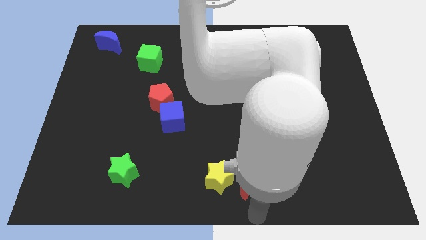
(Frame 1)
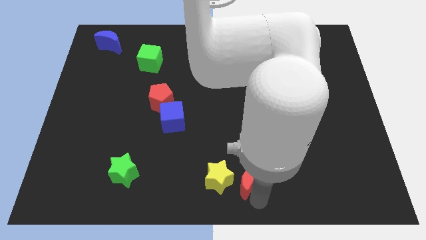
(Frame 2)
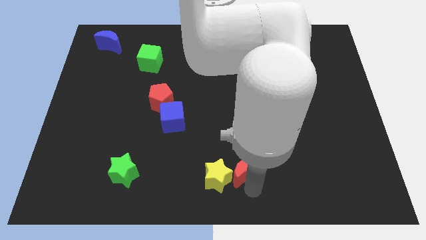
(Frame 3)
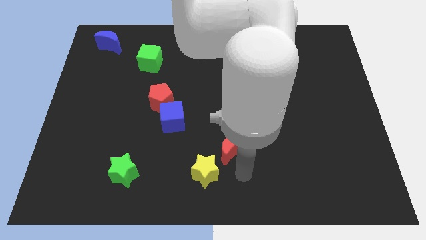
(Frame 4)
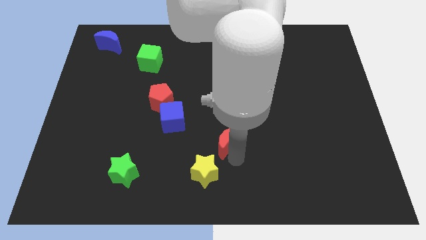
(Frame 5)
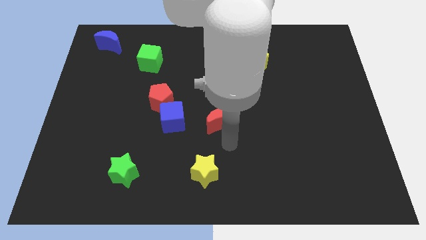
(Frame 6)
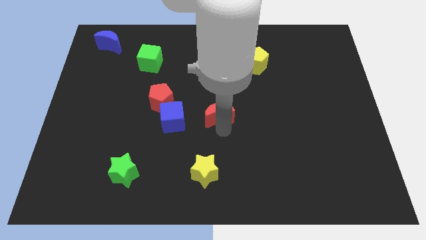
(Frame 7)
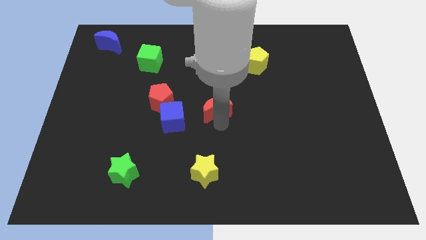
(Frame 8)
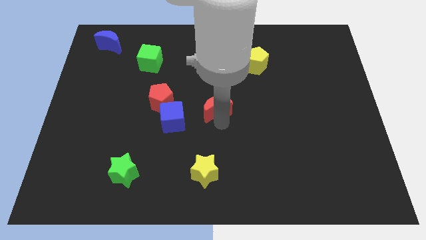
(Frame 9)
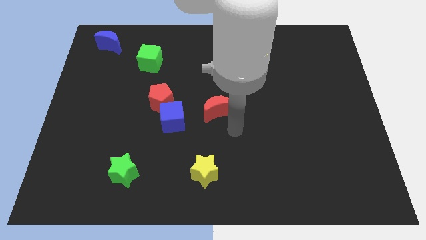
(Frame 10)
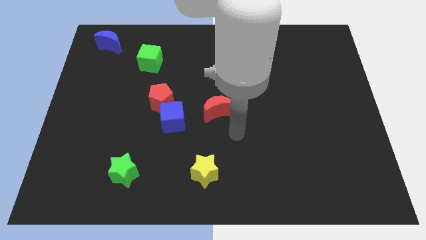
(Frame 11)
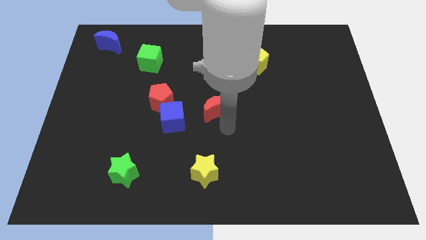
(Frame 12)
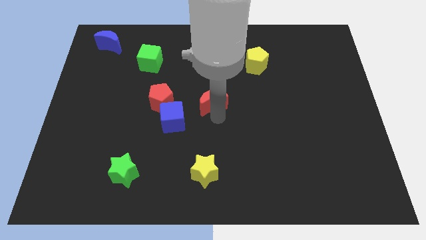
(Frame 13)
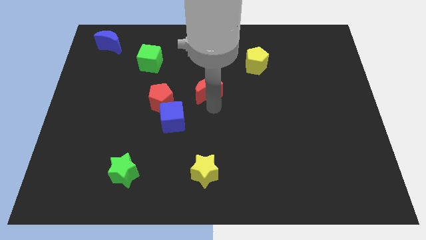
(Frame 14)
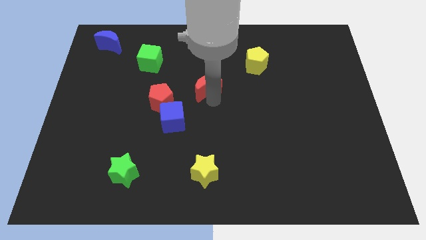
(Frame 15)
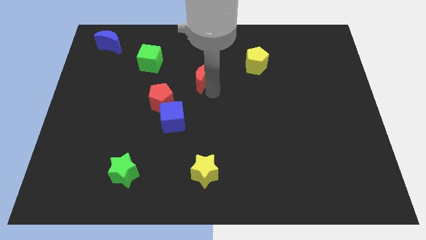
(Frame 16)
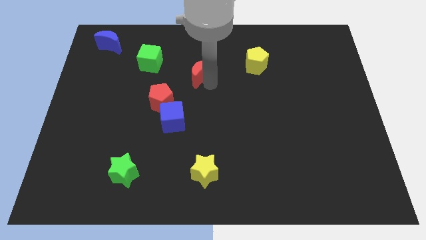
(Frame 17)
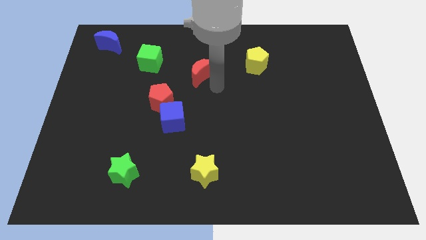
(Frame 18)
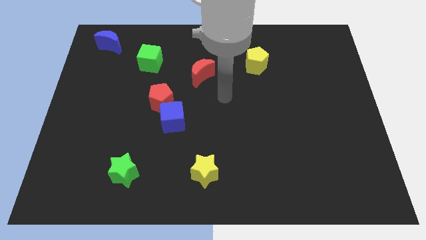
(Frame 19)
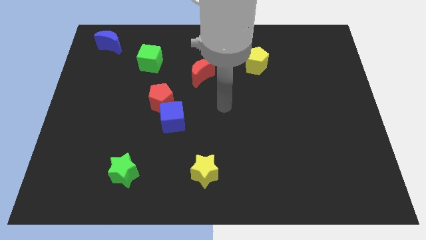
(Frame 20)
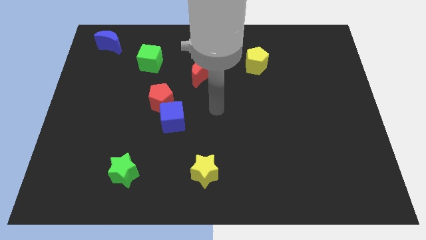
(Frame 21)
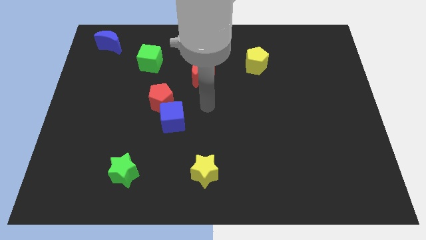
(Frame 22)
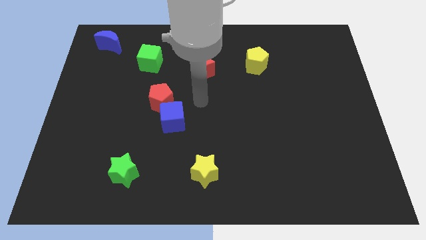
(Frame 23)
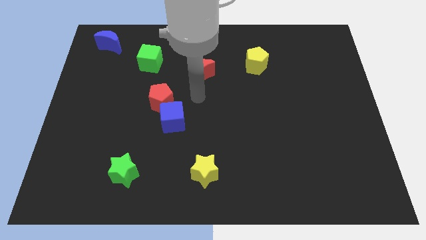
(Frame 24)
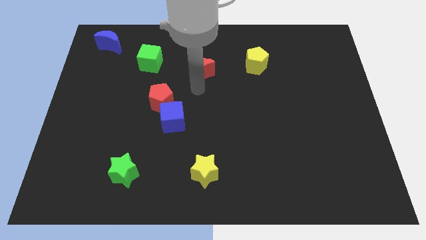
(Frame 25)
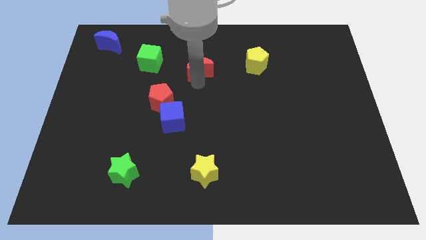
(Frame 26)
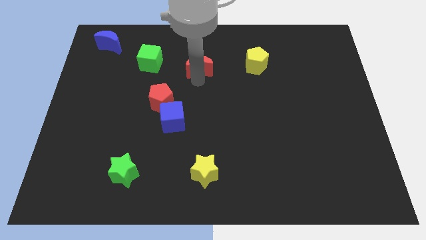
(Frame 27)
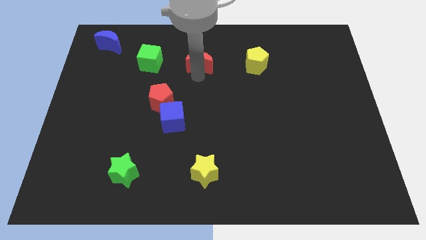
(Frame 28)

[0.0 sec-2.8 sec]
push the red crescent towards the right of the green cube

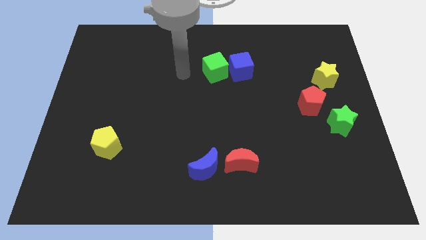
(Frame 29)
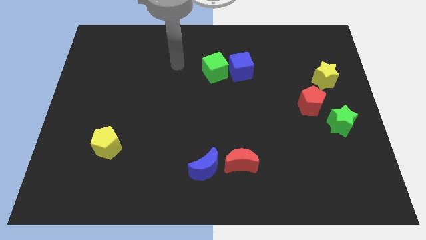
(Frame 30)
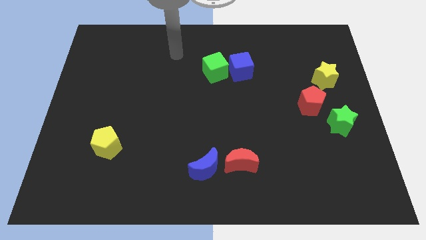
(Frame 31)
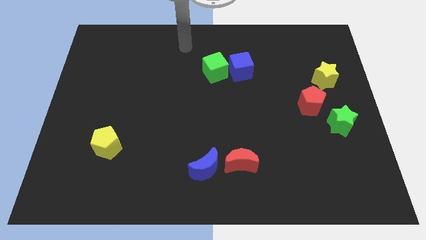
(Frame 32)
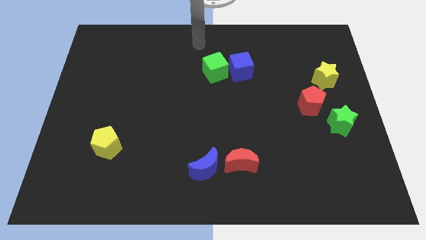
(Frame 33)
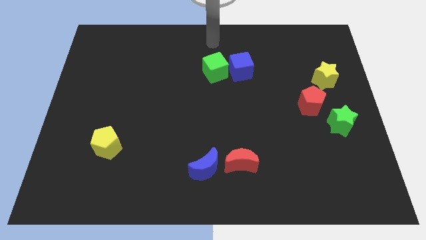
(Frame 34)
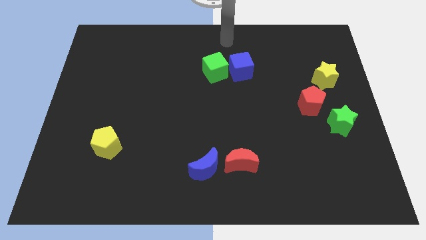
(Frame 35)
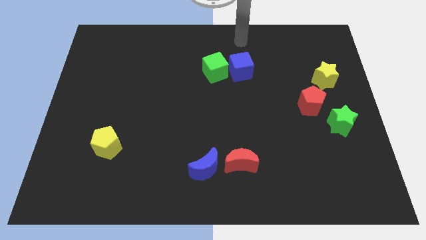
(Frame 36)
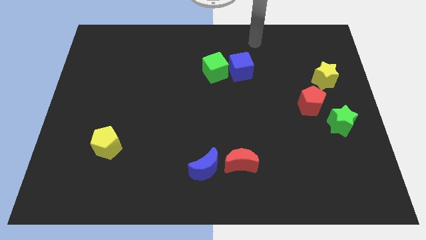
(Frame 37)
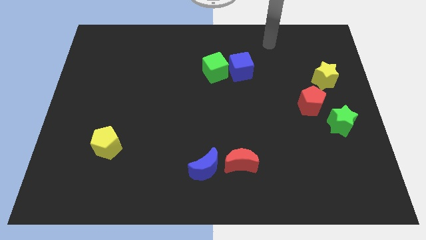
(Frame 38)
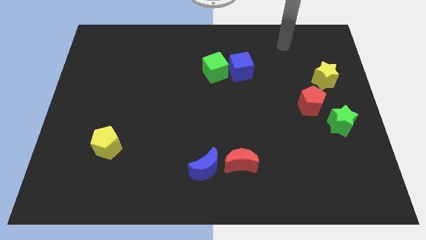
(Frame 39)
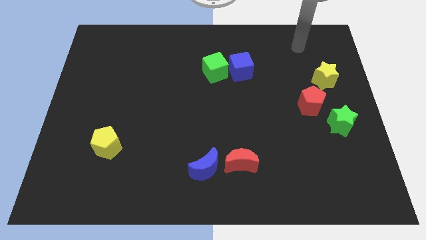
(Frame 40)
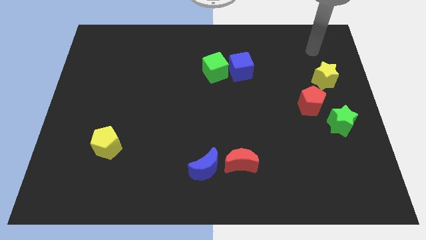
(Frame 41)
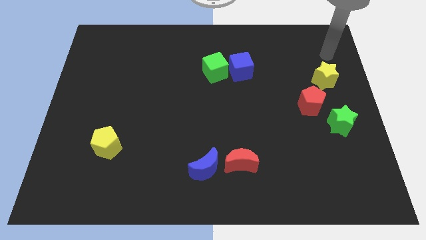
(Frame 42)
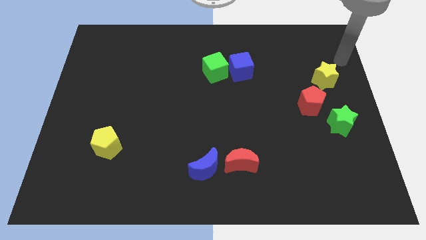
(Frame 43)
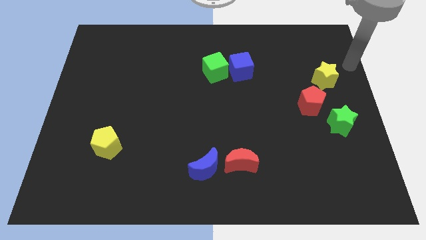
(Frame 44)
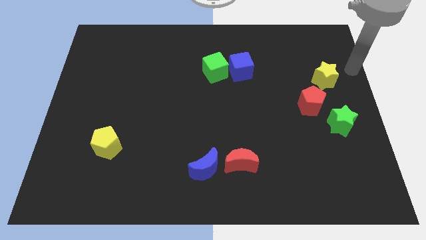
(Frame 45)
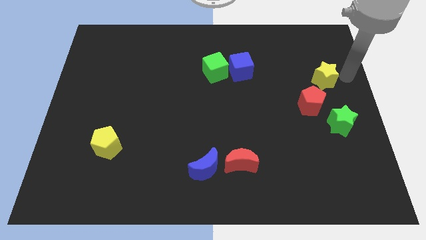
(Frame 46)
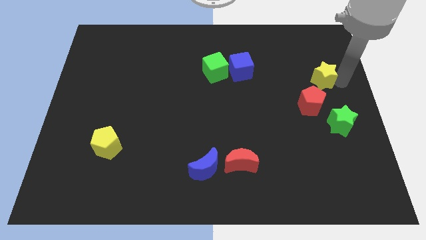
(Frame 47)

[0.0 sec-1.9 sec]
tap the right side of the yellow star

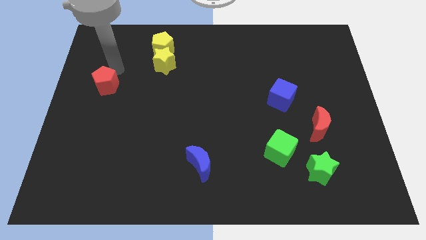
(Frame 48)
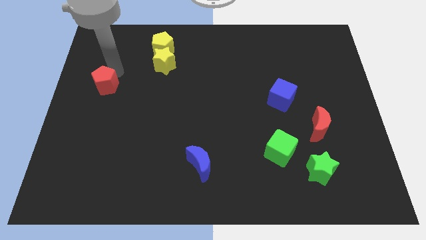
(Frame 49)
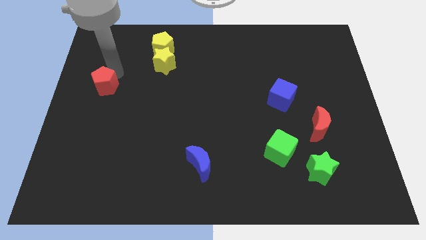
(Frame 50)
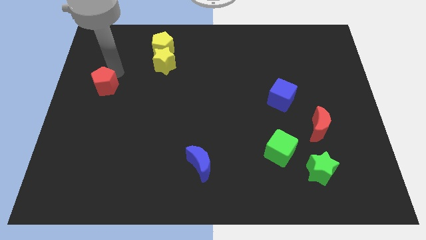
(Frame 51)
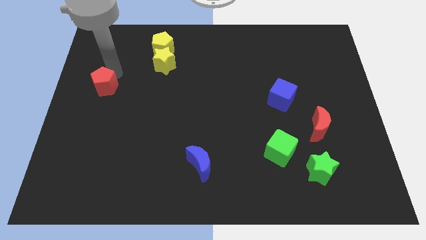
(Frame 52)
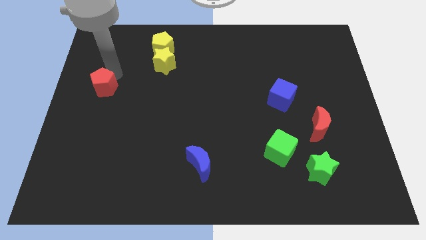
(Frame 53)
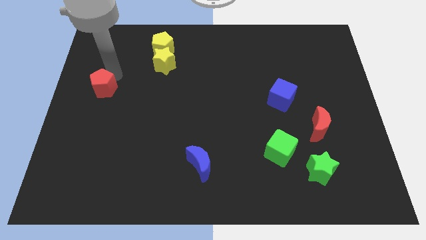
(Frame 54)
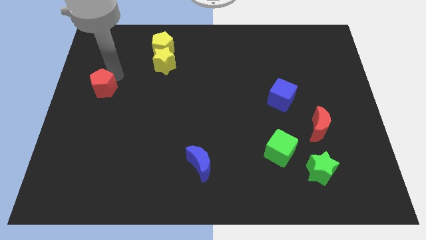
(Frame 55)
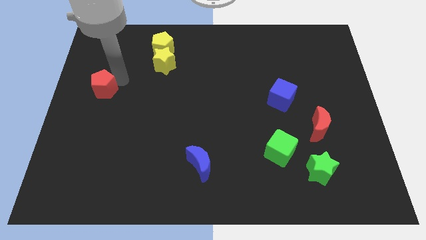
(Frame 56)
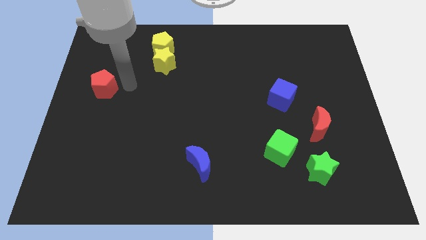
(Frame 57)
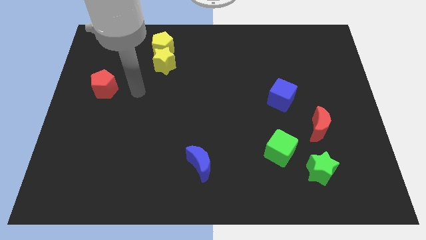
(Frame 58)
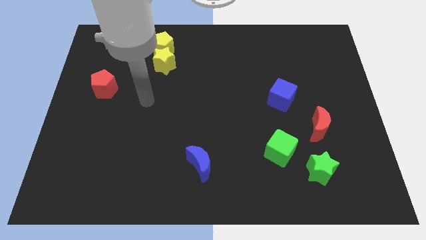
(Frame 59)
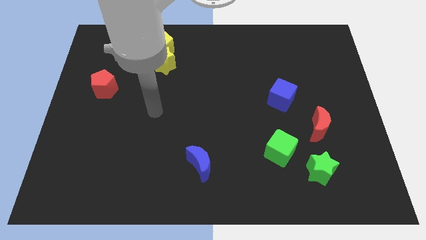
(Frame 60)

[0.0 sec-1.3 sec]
push the red pentagon slightly to the bottom of the board

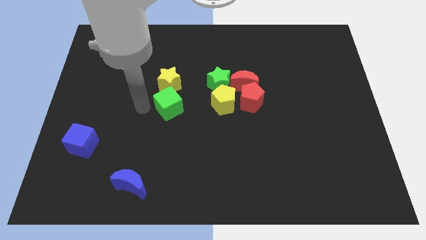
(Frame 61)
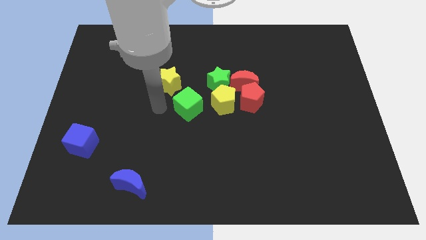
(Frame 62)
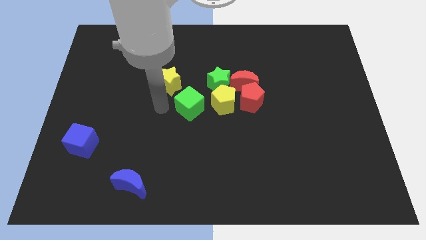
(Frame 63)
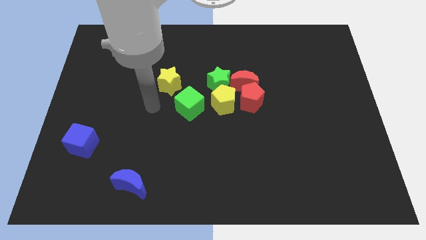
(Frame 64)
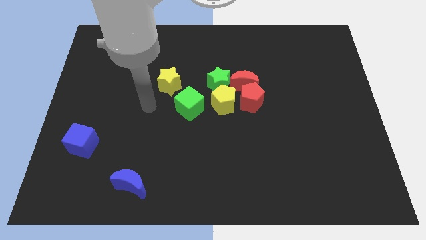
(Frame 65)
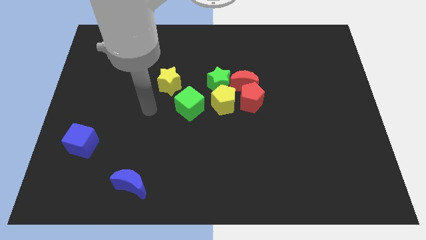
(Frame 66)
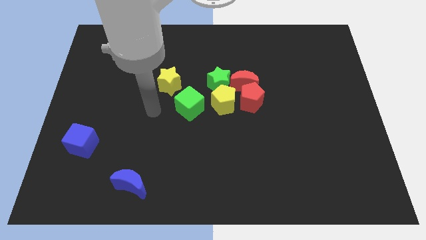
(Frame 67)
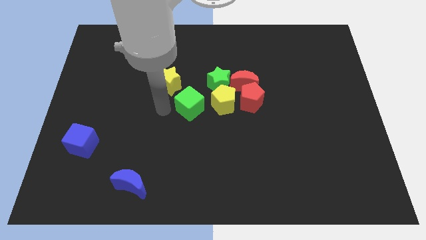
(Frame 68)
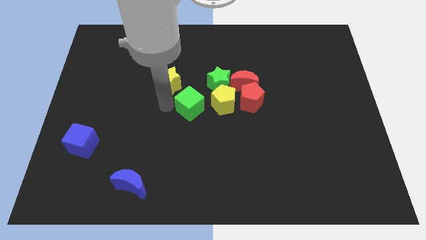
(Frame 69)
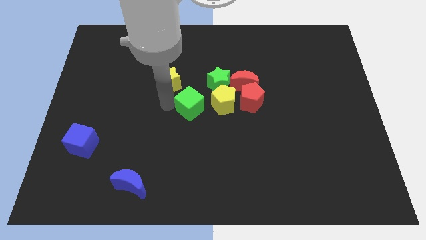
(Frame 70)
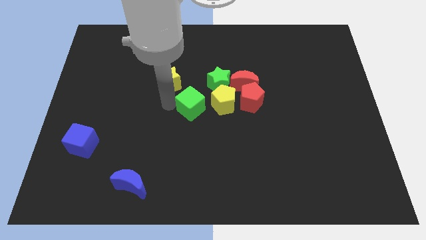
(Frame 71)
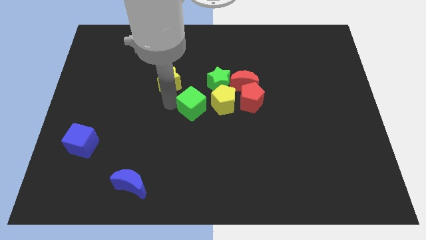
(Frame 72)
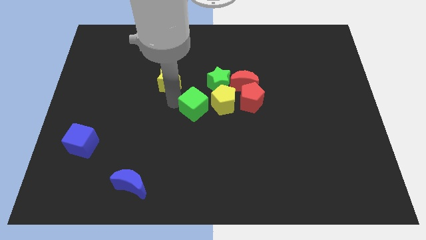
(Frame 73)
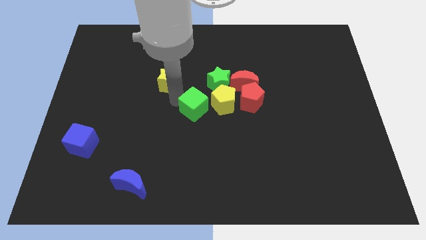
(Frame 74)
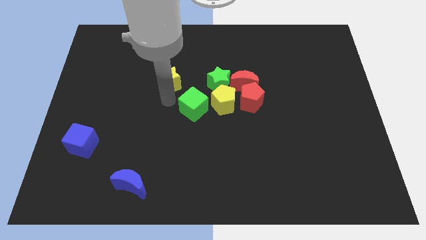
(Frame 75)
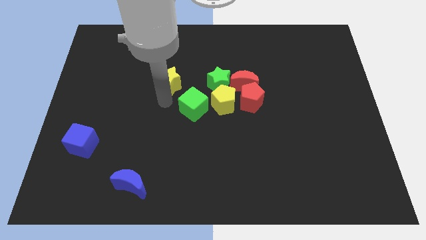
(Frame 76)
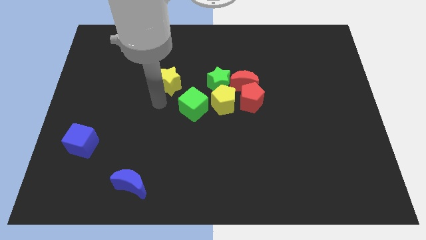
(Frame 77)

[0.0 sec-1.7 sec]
move the green cube close to the yellow pentagon

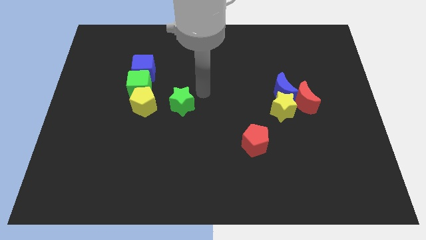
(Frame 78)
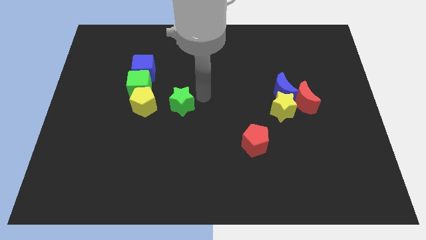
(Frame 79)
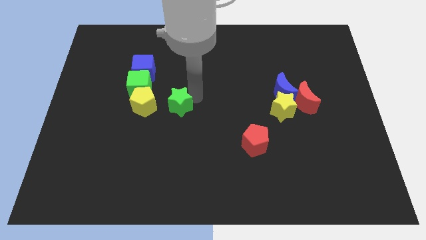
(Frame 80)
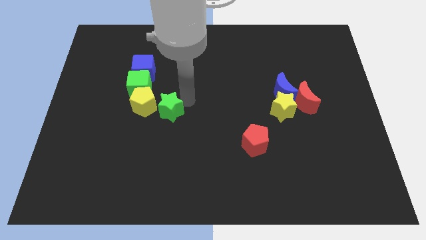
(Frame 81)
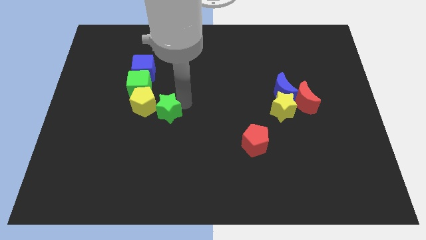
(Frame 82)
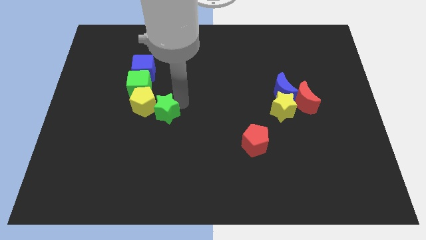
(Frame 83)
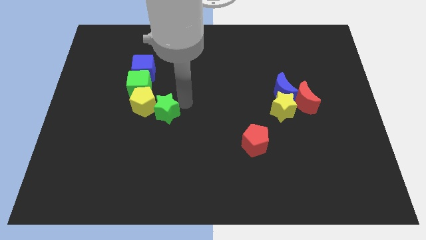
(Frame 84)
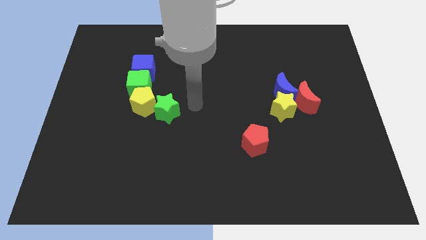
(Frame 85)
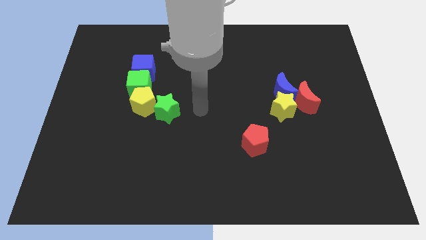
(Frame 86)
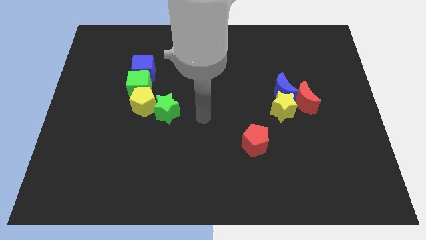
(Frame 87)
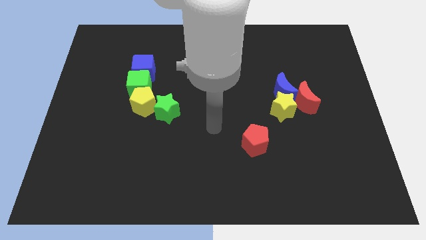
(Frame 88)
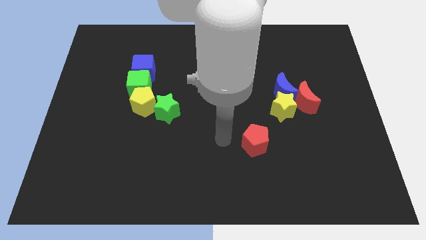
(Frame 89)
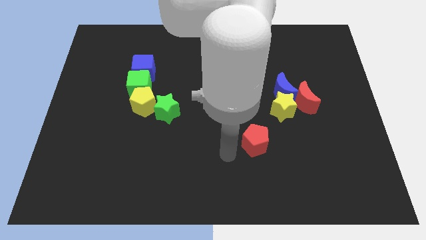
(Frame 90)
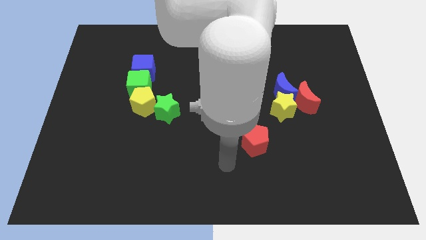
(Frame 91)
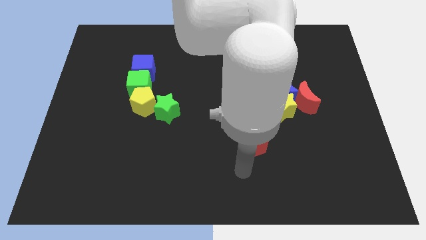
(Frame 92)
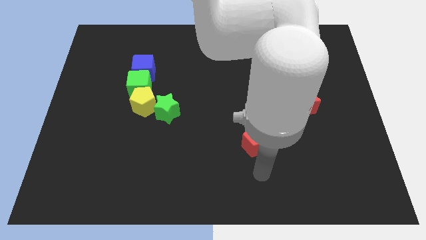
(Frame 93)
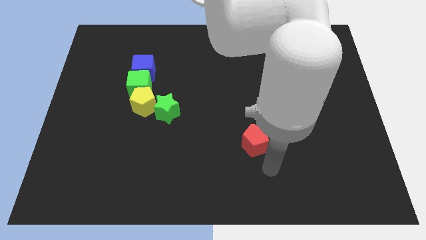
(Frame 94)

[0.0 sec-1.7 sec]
move the arm away from the green star
